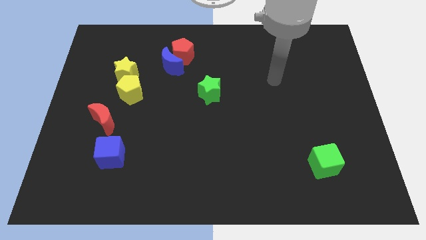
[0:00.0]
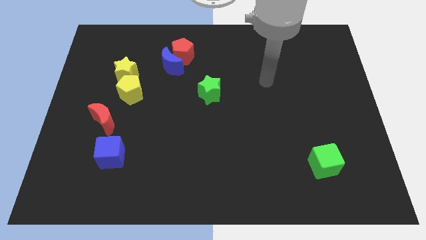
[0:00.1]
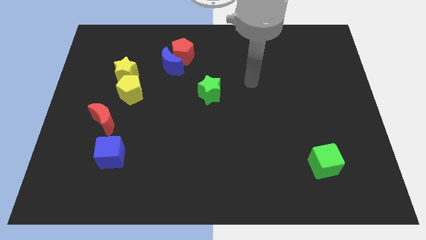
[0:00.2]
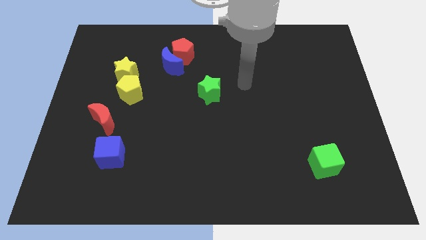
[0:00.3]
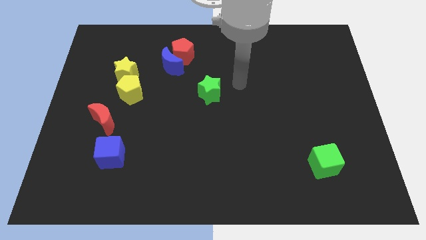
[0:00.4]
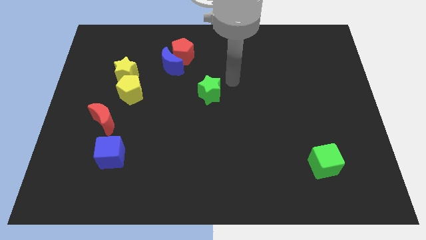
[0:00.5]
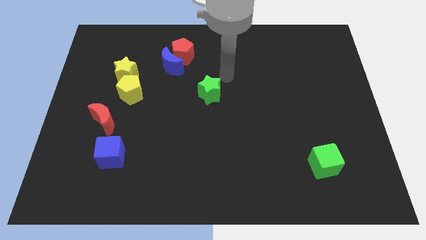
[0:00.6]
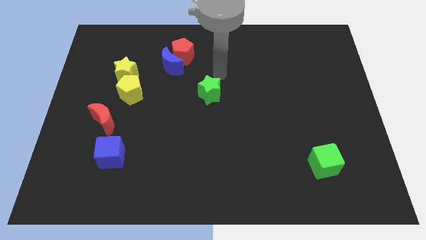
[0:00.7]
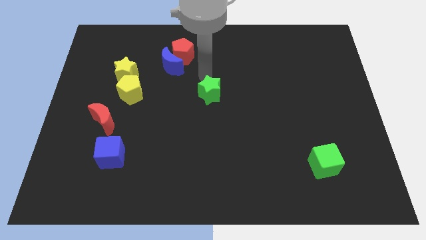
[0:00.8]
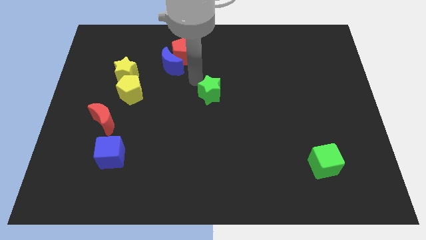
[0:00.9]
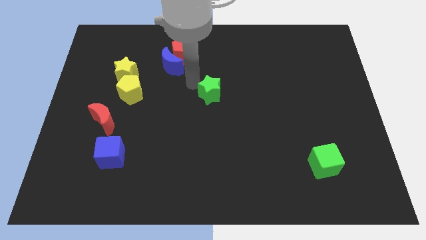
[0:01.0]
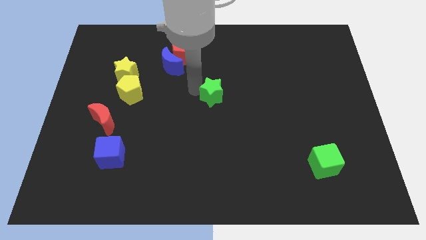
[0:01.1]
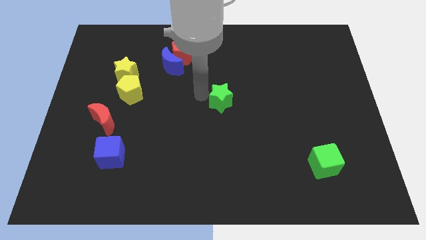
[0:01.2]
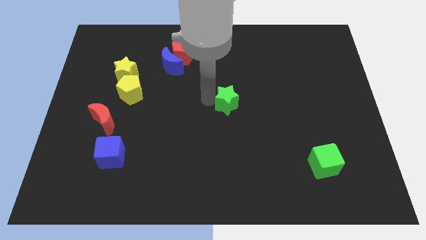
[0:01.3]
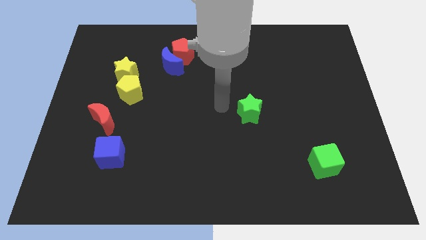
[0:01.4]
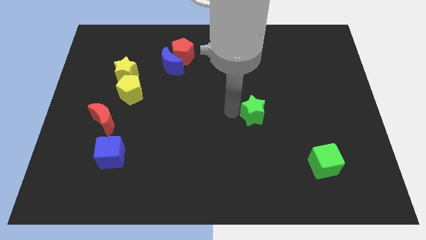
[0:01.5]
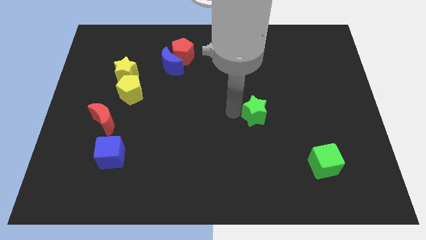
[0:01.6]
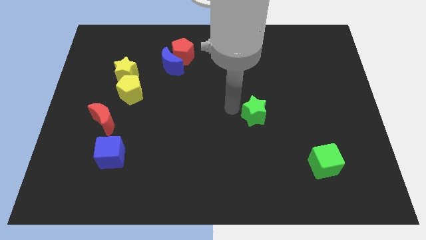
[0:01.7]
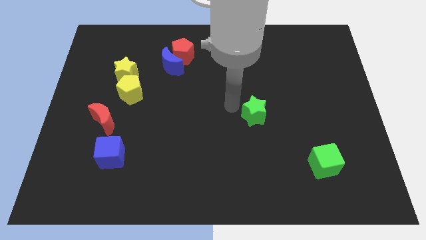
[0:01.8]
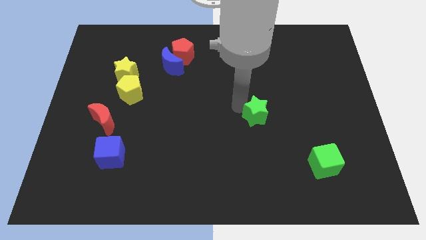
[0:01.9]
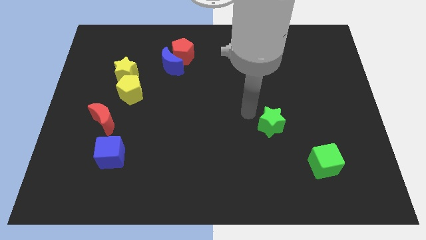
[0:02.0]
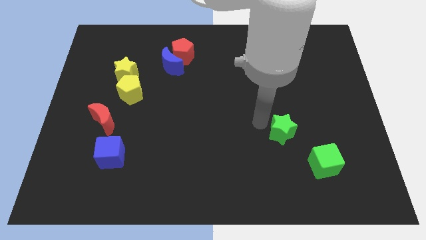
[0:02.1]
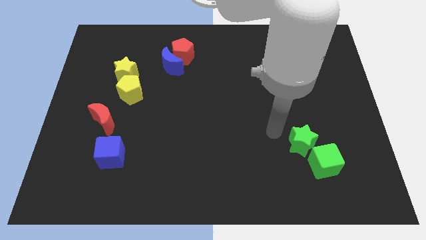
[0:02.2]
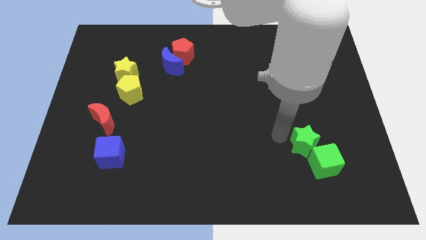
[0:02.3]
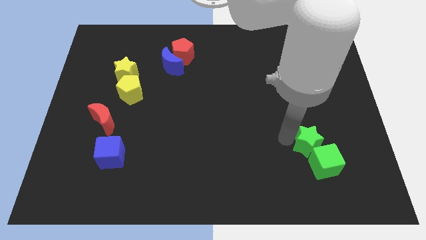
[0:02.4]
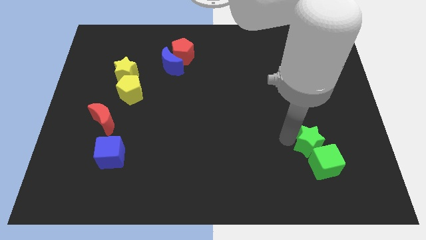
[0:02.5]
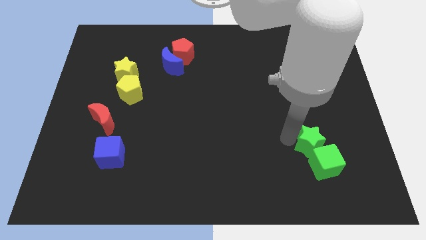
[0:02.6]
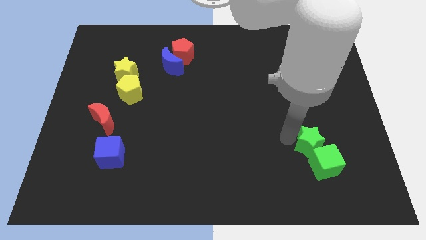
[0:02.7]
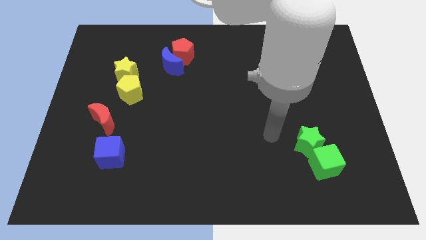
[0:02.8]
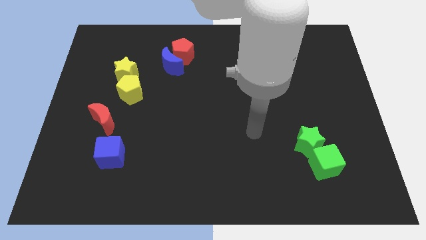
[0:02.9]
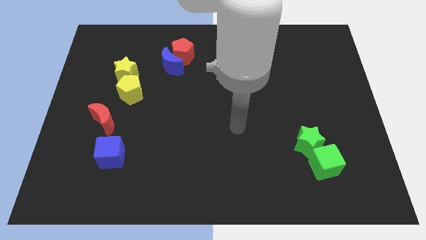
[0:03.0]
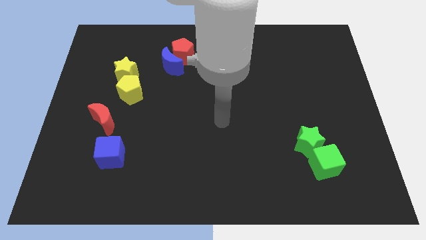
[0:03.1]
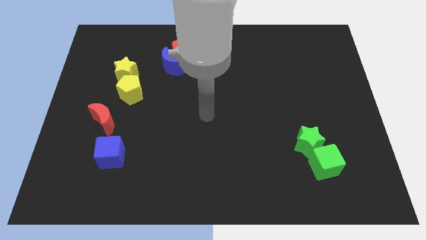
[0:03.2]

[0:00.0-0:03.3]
push the green star to the top side of the green cube

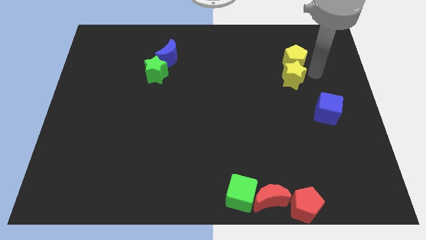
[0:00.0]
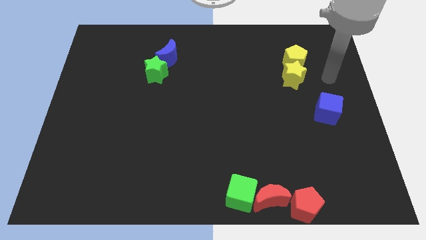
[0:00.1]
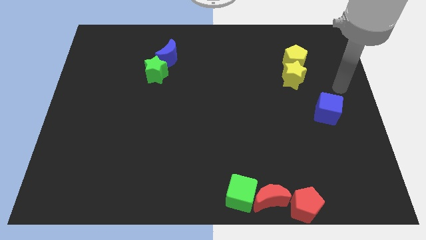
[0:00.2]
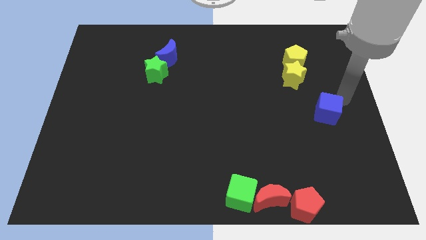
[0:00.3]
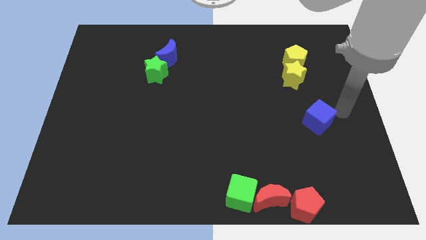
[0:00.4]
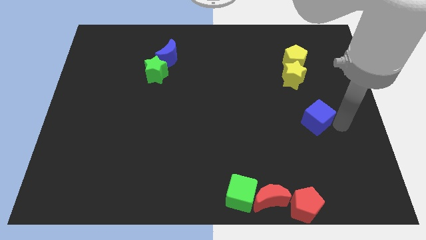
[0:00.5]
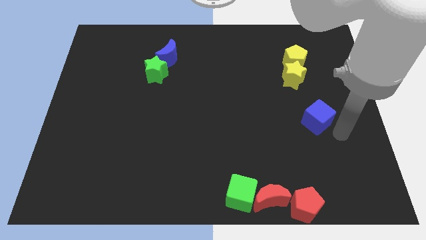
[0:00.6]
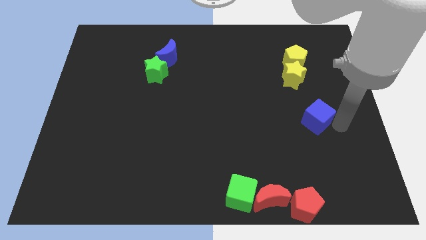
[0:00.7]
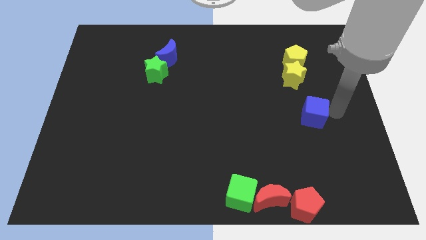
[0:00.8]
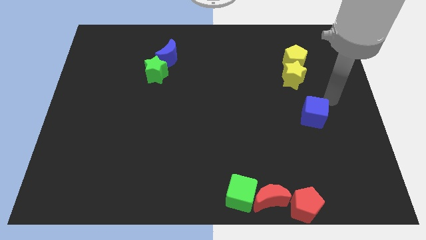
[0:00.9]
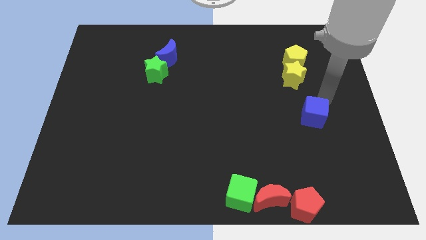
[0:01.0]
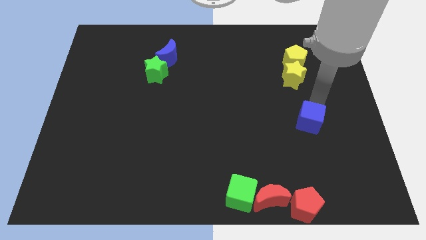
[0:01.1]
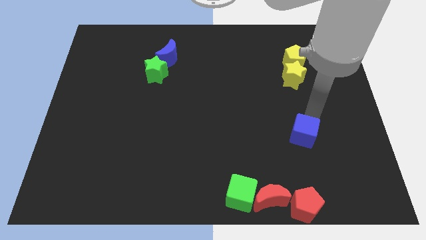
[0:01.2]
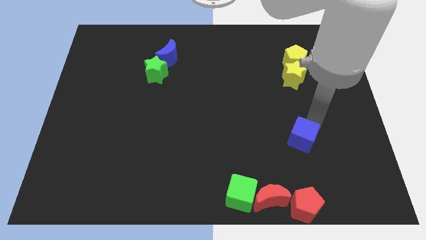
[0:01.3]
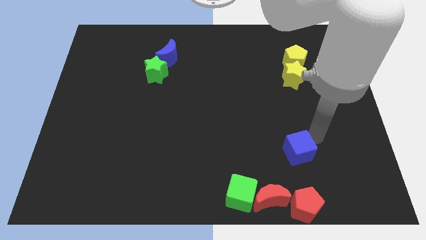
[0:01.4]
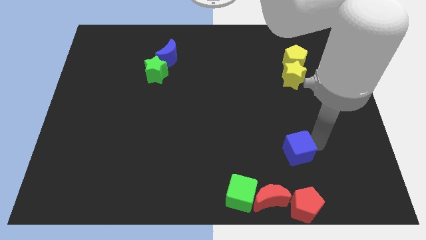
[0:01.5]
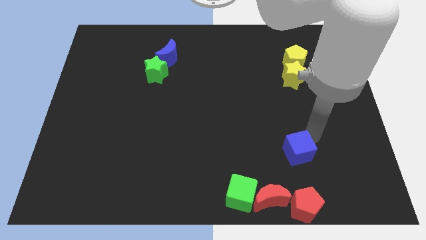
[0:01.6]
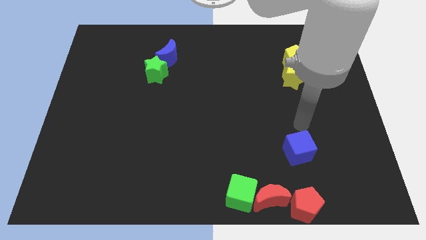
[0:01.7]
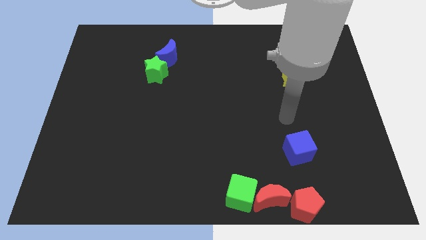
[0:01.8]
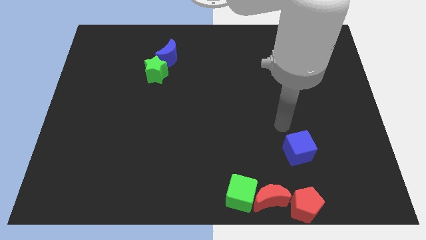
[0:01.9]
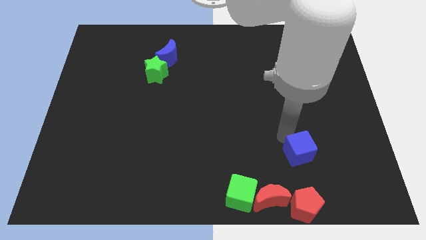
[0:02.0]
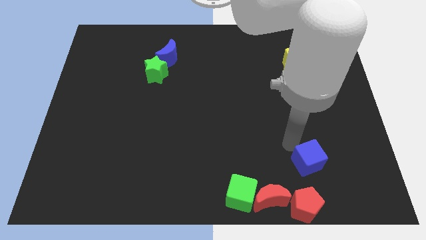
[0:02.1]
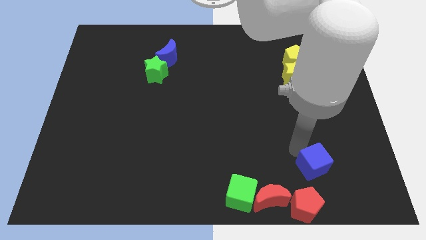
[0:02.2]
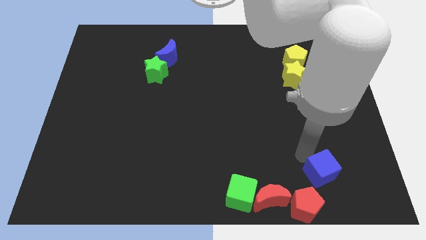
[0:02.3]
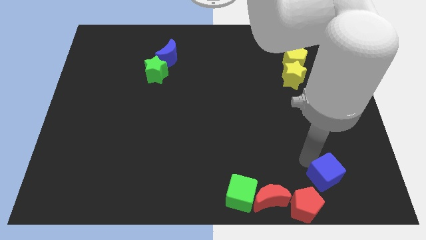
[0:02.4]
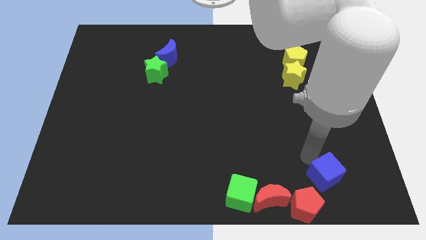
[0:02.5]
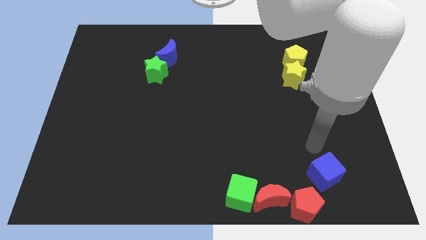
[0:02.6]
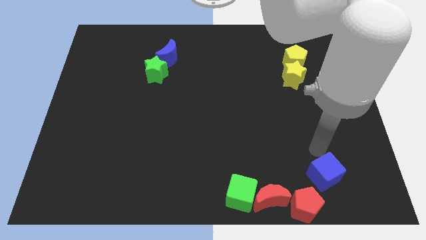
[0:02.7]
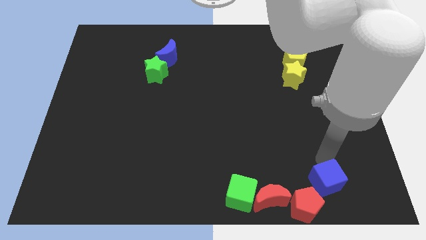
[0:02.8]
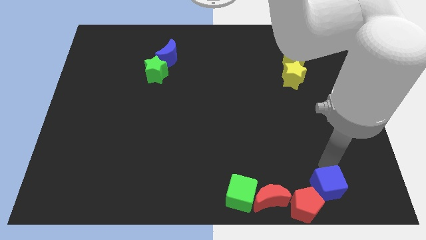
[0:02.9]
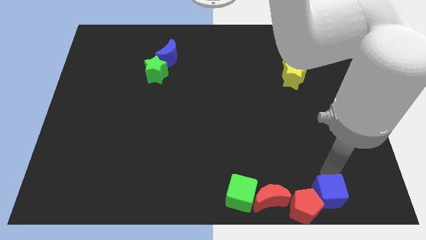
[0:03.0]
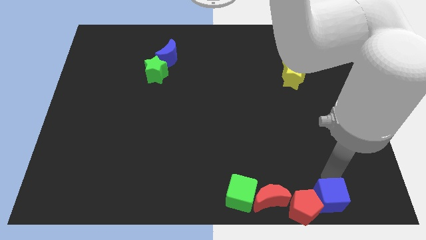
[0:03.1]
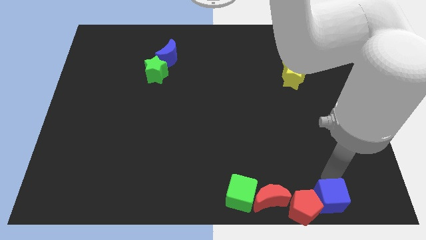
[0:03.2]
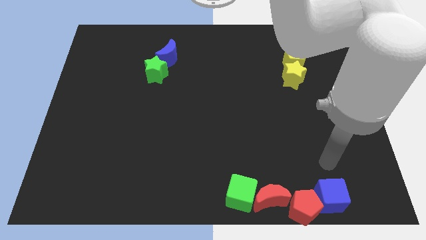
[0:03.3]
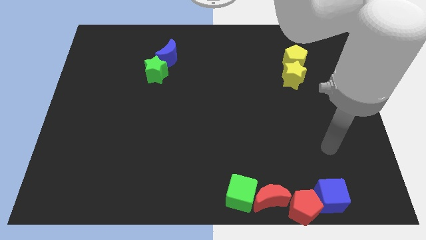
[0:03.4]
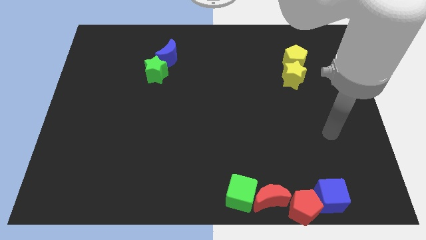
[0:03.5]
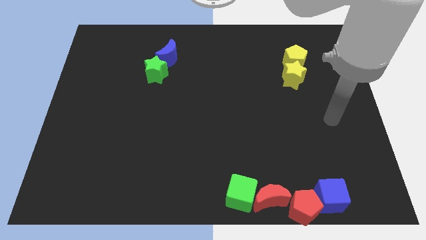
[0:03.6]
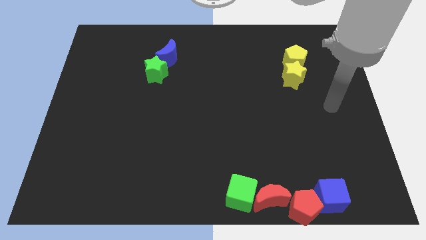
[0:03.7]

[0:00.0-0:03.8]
move the blue cube to the right of red pentagon

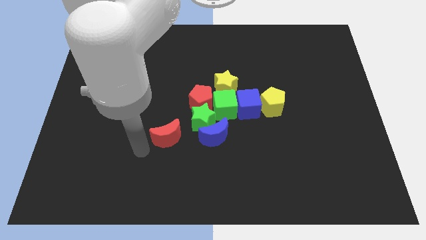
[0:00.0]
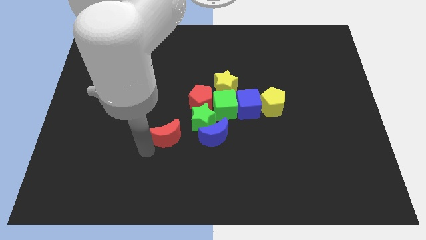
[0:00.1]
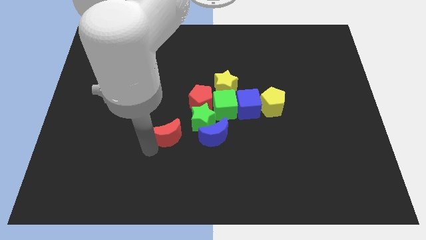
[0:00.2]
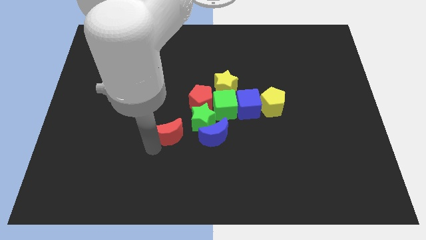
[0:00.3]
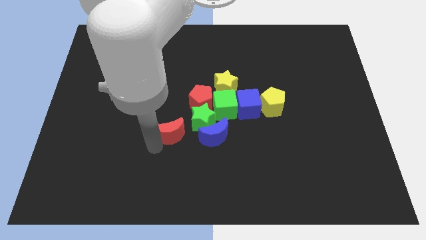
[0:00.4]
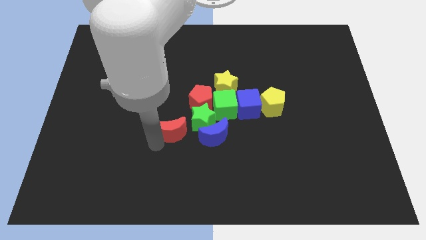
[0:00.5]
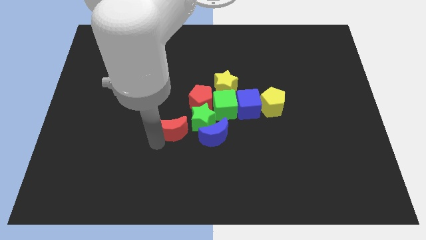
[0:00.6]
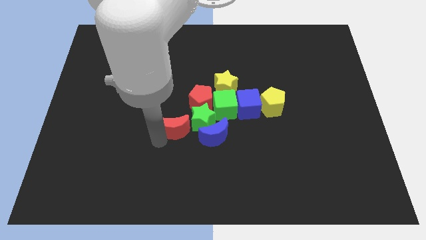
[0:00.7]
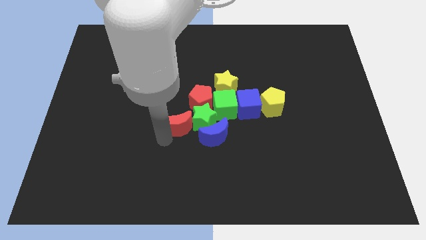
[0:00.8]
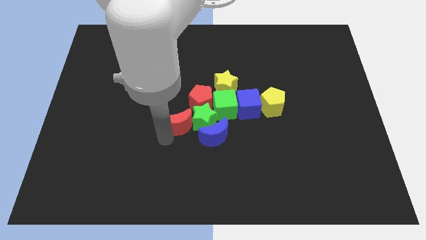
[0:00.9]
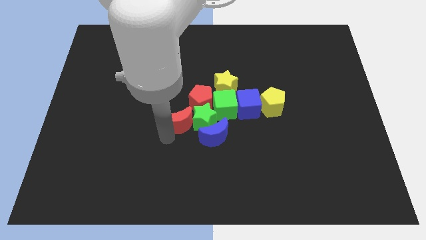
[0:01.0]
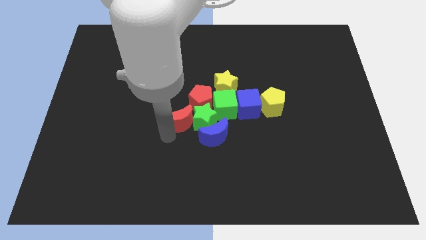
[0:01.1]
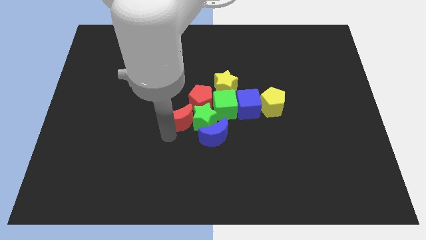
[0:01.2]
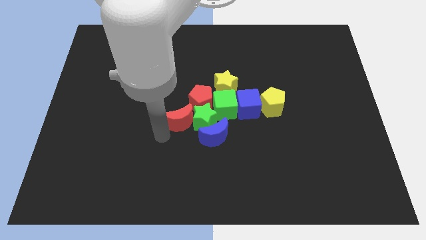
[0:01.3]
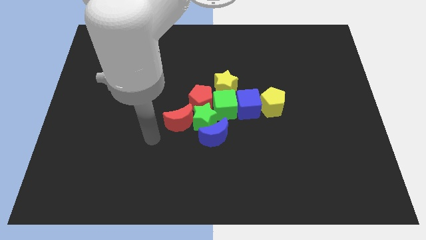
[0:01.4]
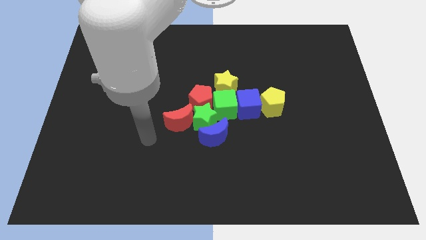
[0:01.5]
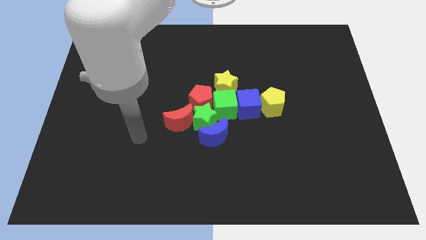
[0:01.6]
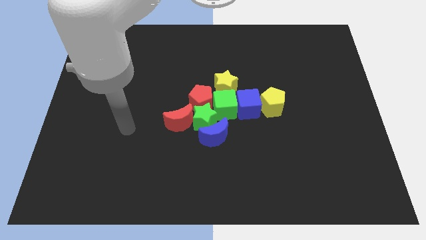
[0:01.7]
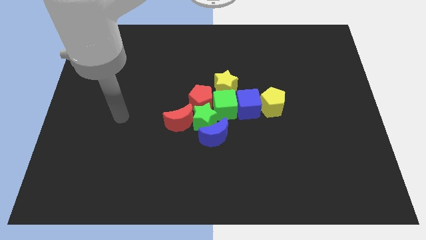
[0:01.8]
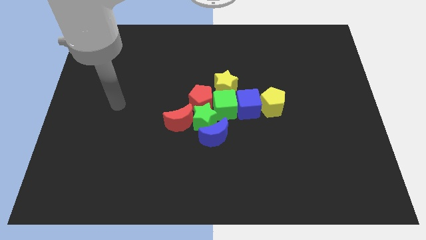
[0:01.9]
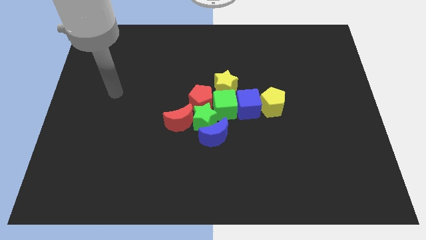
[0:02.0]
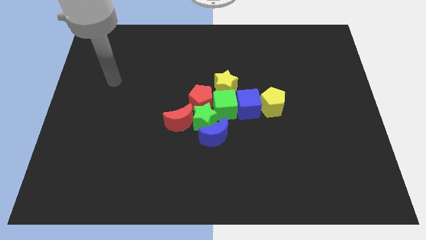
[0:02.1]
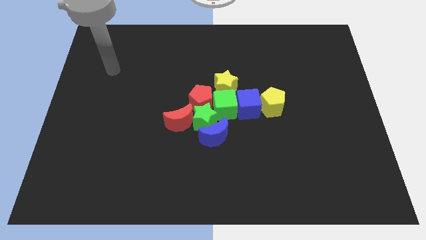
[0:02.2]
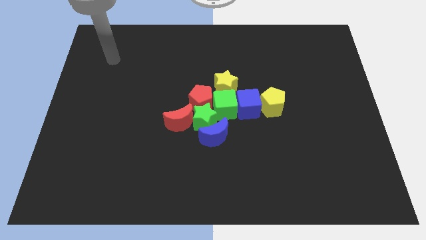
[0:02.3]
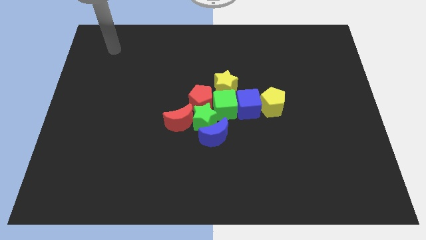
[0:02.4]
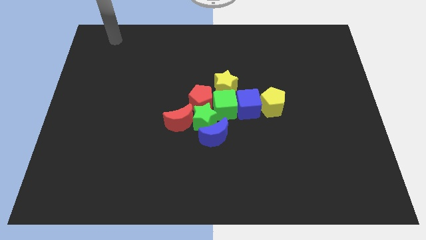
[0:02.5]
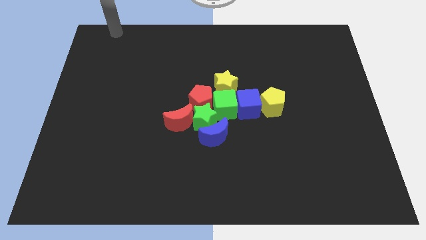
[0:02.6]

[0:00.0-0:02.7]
move red moon into the group of blocks
